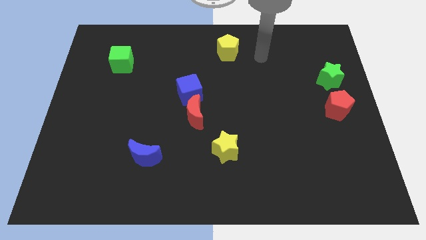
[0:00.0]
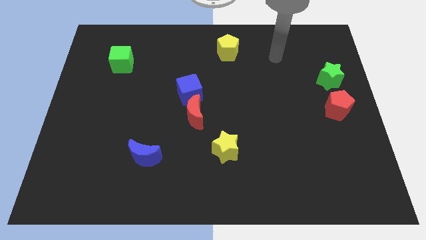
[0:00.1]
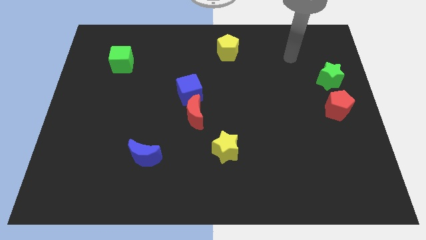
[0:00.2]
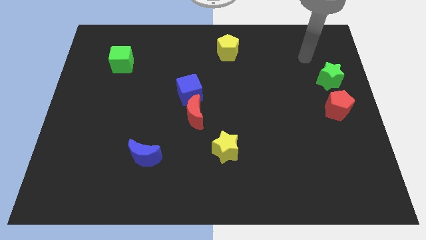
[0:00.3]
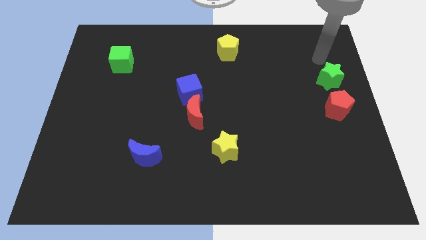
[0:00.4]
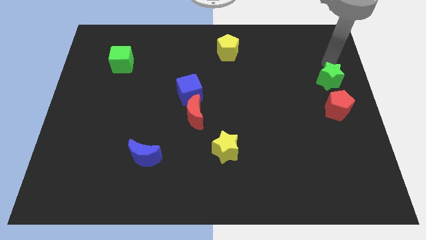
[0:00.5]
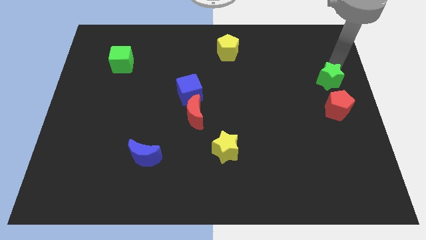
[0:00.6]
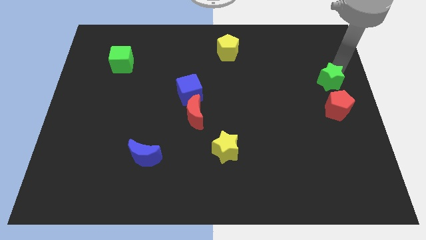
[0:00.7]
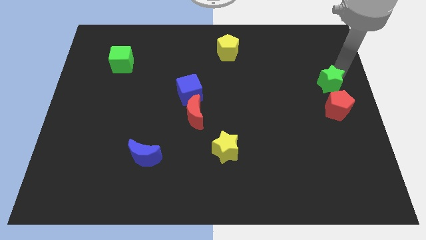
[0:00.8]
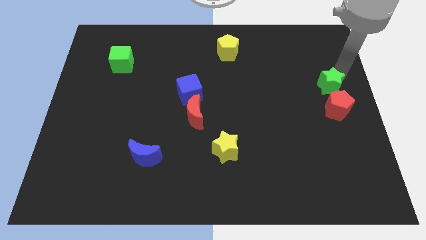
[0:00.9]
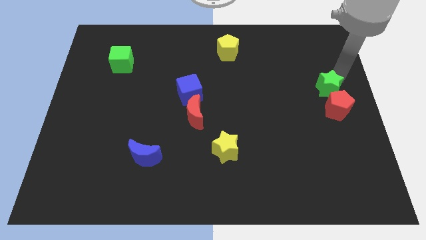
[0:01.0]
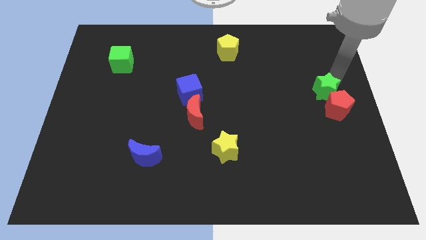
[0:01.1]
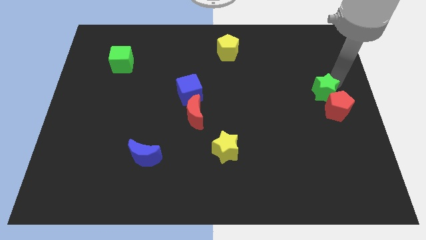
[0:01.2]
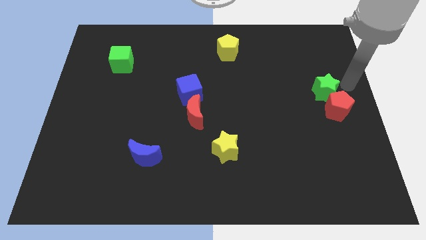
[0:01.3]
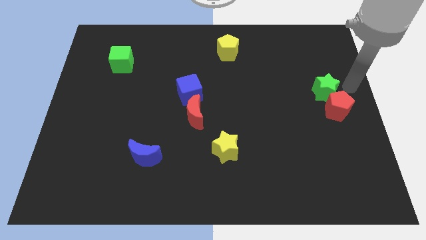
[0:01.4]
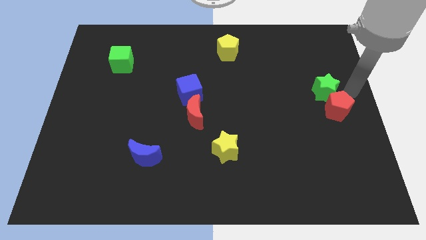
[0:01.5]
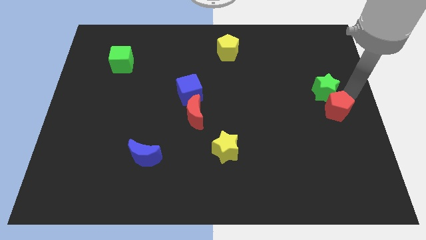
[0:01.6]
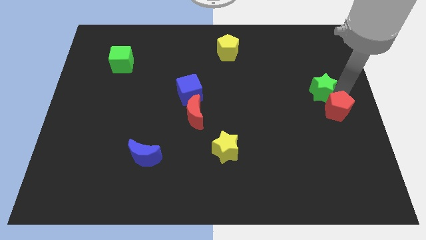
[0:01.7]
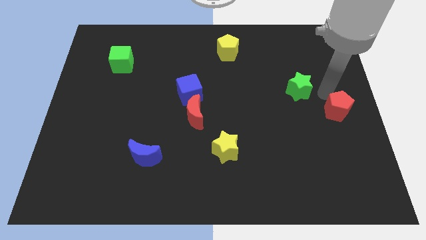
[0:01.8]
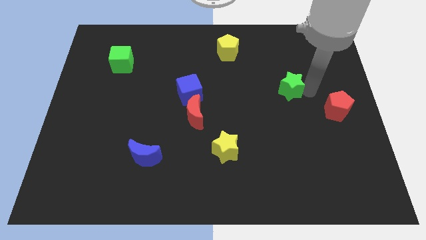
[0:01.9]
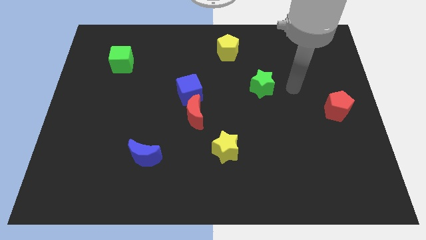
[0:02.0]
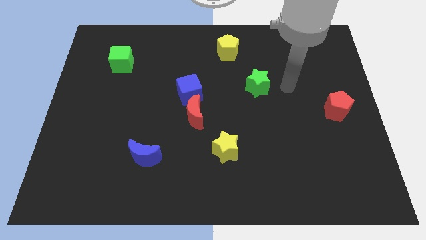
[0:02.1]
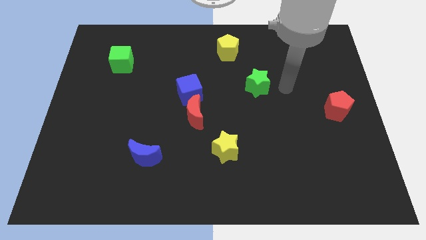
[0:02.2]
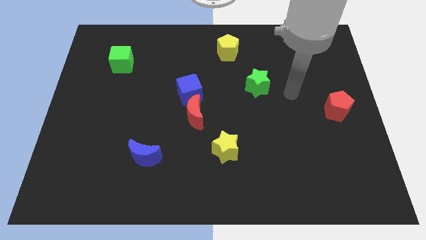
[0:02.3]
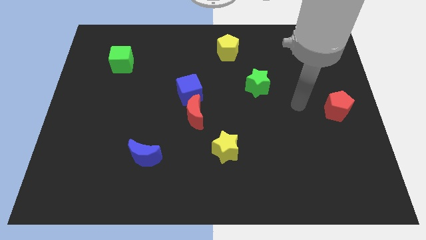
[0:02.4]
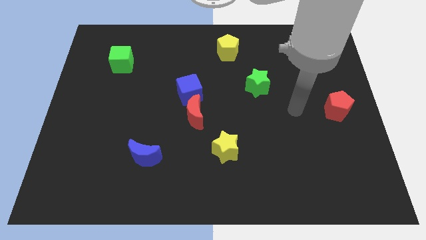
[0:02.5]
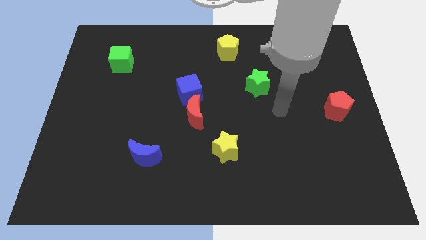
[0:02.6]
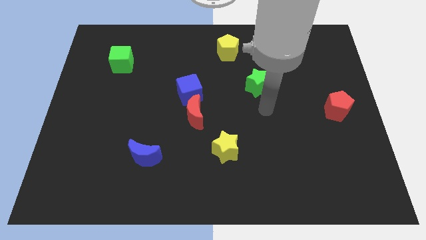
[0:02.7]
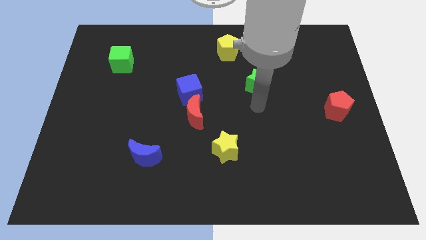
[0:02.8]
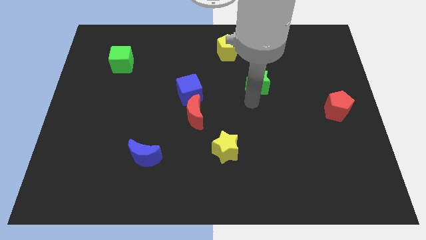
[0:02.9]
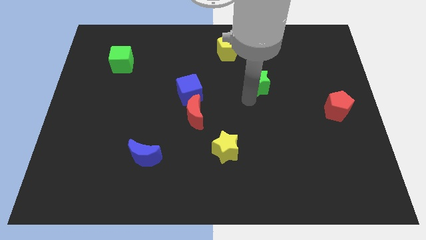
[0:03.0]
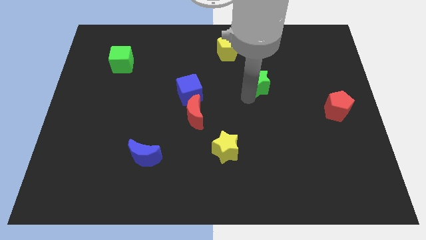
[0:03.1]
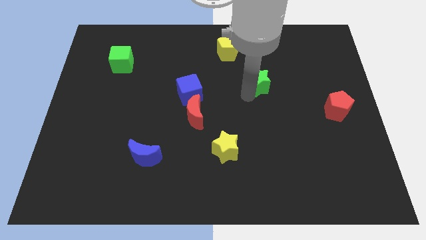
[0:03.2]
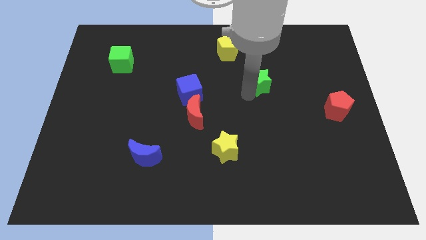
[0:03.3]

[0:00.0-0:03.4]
slide the green star diagonally on the bottom right side of the yellow pentagon

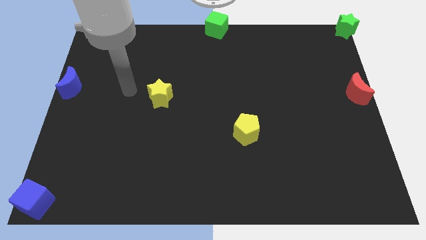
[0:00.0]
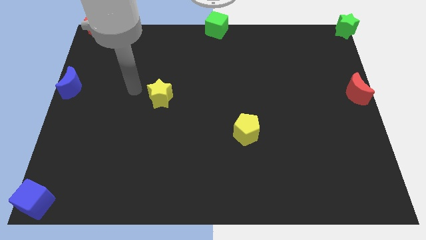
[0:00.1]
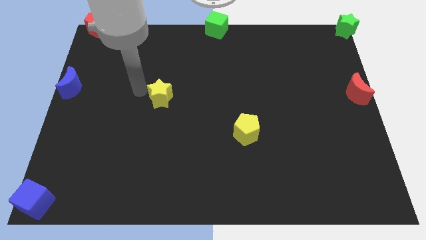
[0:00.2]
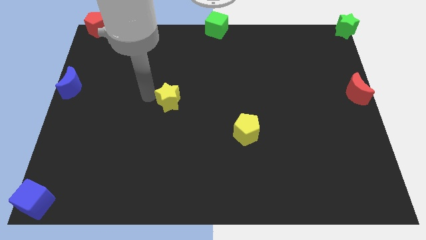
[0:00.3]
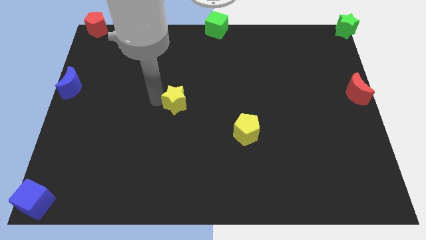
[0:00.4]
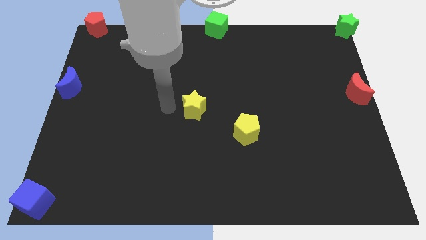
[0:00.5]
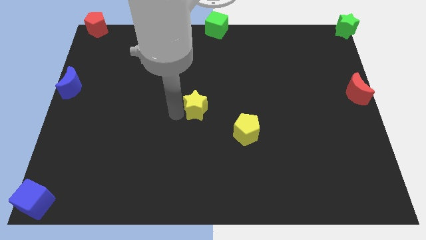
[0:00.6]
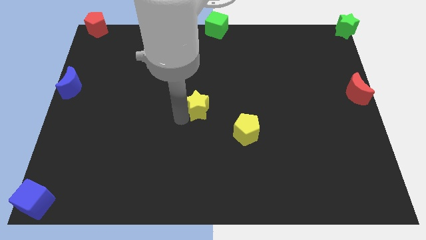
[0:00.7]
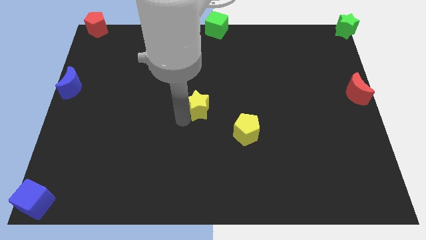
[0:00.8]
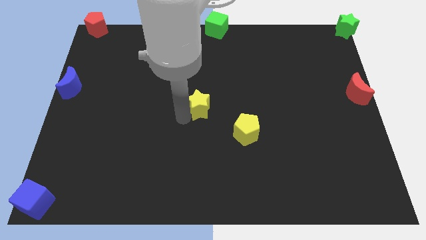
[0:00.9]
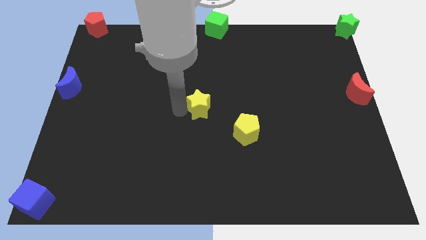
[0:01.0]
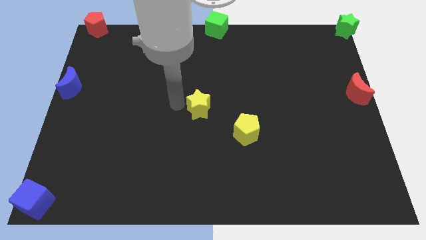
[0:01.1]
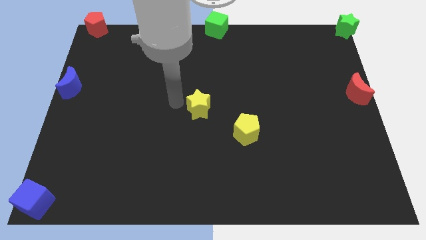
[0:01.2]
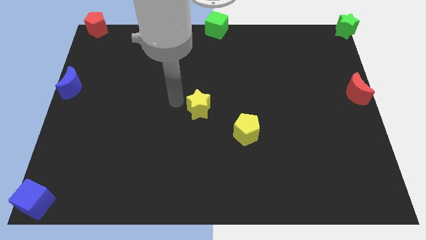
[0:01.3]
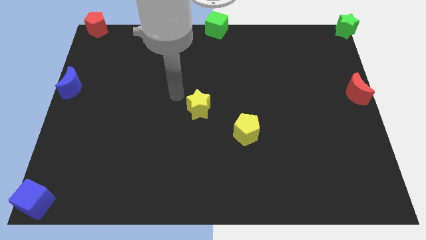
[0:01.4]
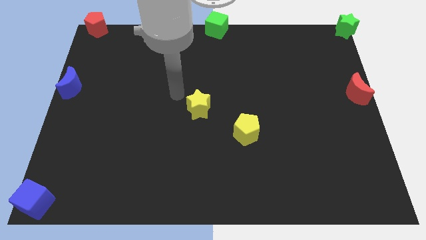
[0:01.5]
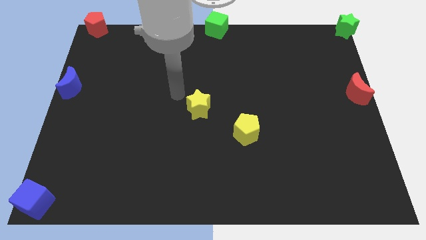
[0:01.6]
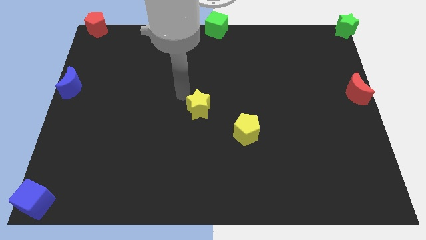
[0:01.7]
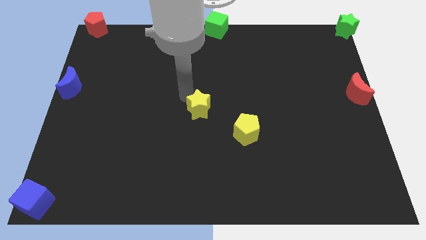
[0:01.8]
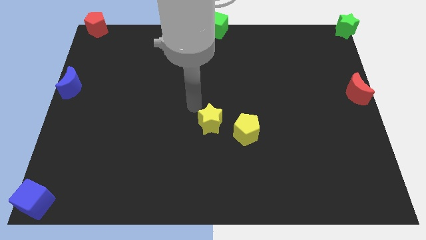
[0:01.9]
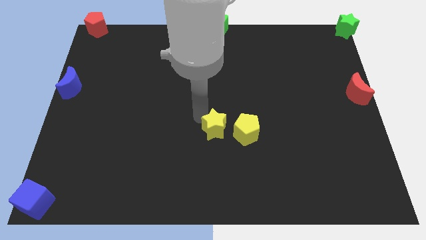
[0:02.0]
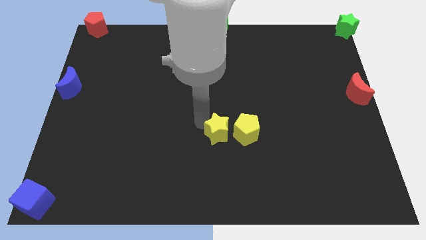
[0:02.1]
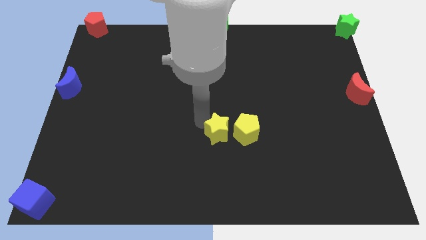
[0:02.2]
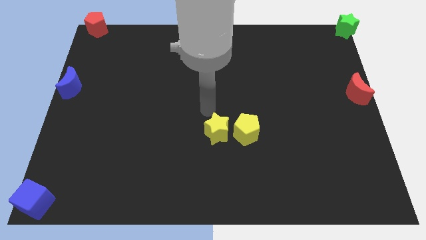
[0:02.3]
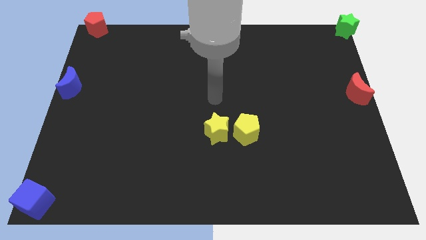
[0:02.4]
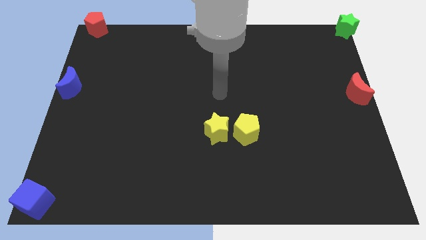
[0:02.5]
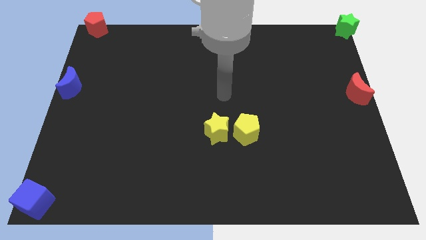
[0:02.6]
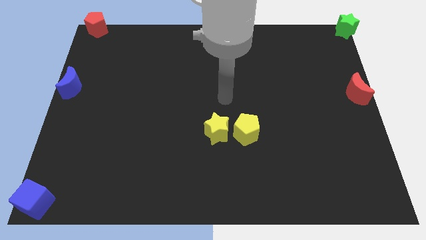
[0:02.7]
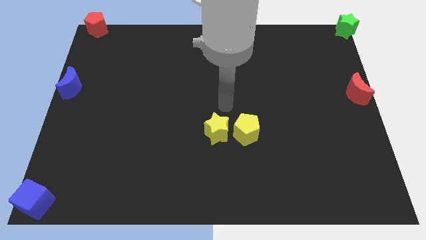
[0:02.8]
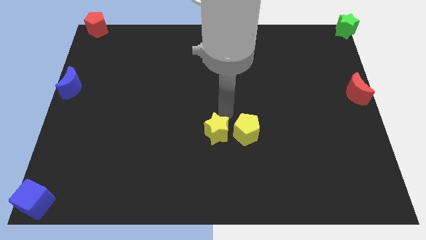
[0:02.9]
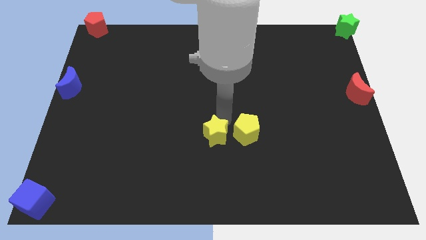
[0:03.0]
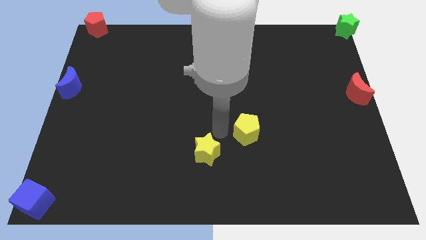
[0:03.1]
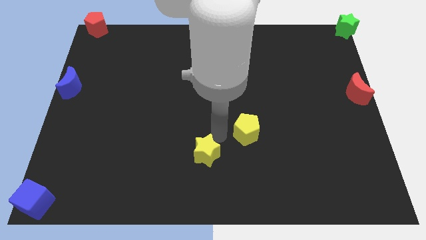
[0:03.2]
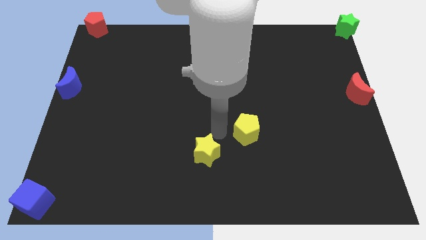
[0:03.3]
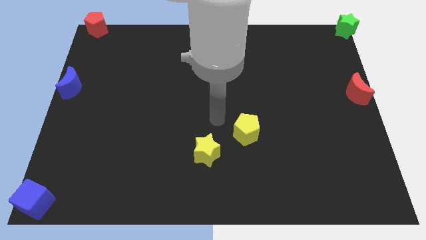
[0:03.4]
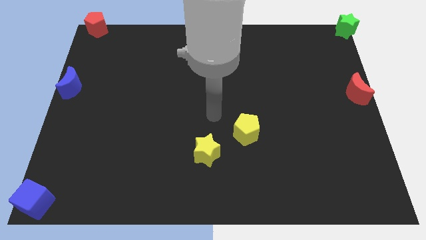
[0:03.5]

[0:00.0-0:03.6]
place the yellow star diagonal to the yellow pentagon

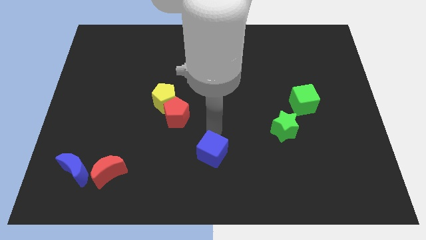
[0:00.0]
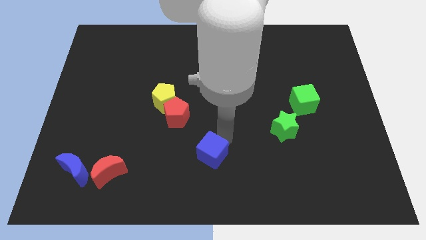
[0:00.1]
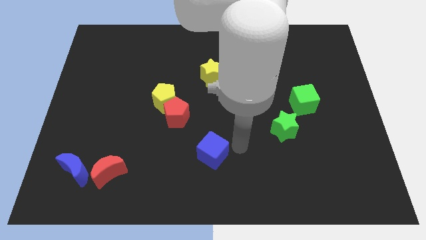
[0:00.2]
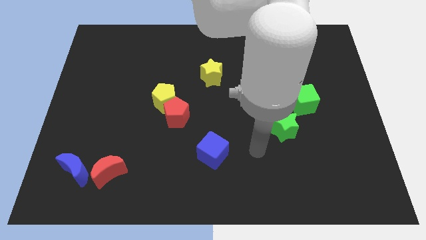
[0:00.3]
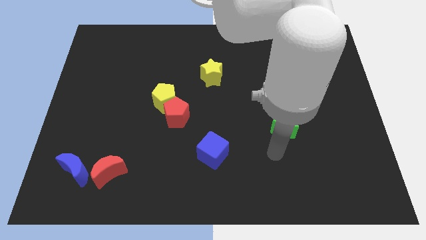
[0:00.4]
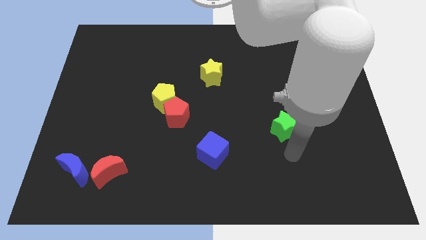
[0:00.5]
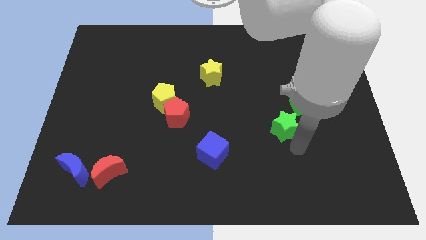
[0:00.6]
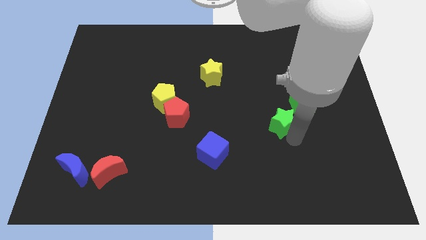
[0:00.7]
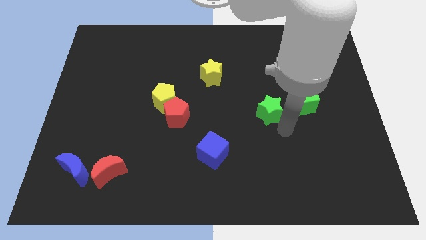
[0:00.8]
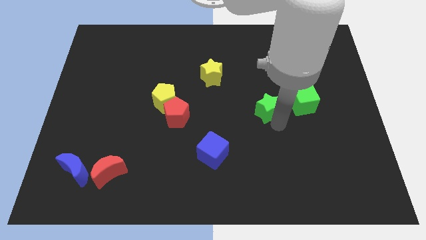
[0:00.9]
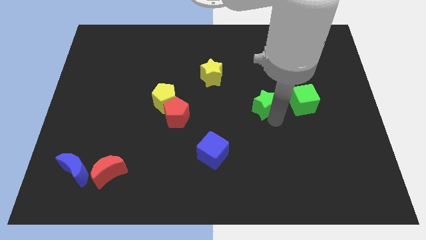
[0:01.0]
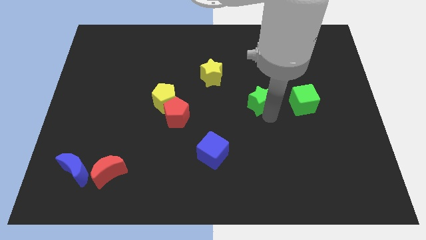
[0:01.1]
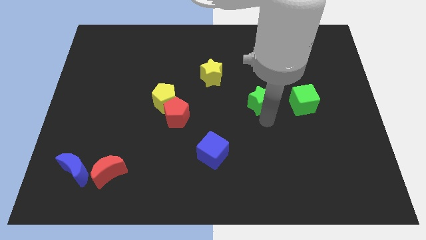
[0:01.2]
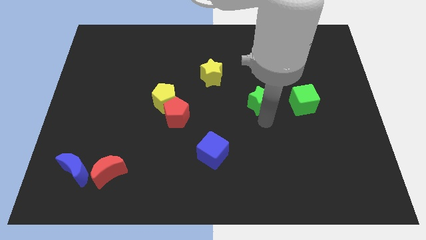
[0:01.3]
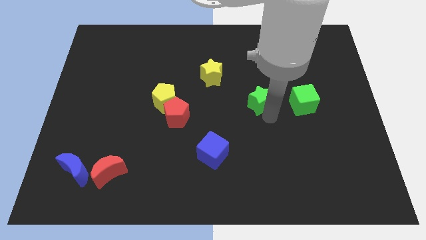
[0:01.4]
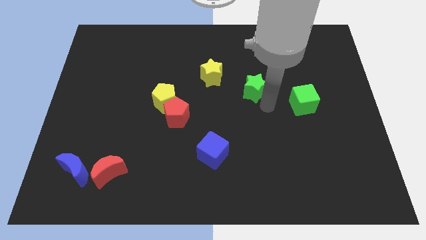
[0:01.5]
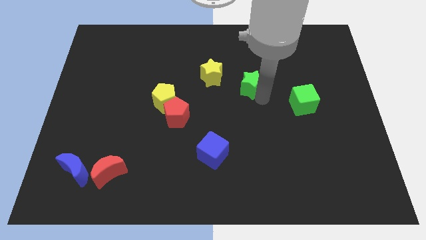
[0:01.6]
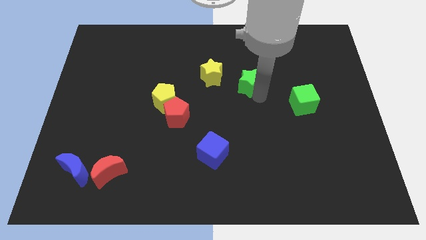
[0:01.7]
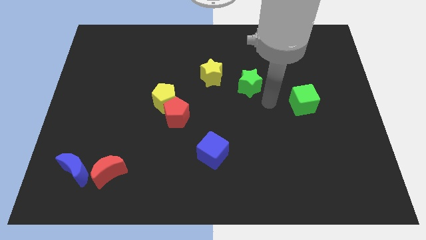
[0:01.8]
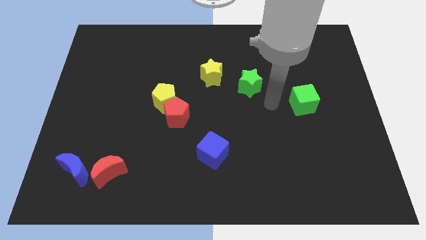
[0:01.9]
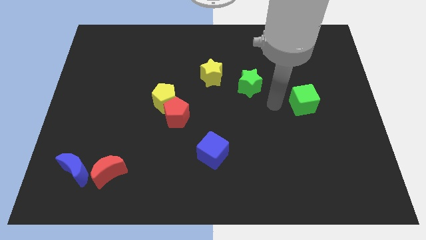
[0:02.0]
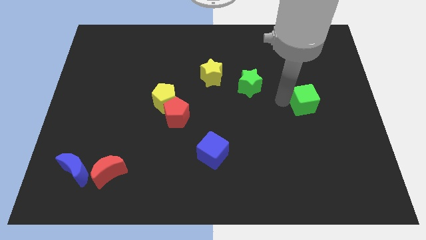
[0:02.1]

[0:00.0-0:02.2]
push green star towards the yellow star
